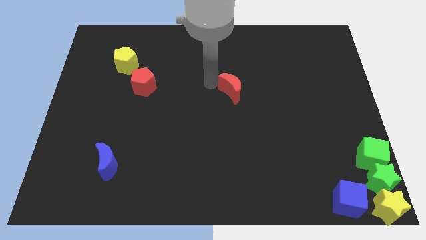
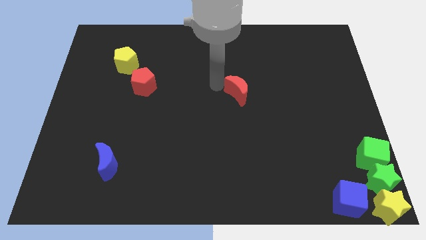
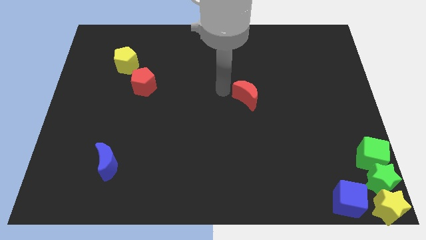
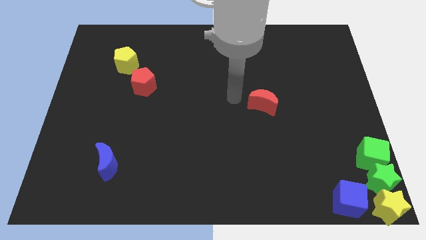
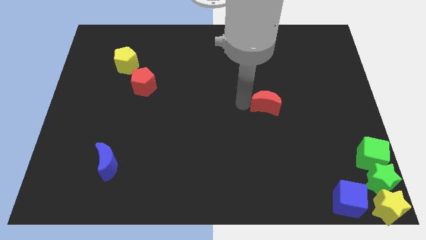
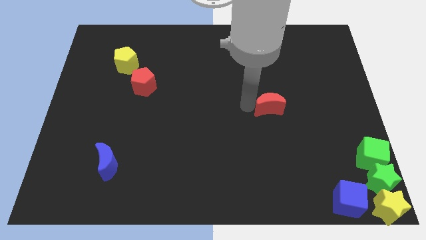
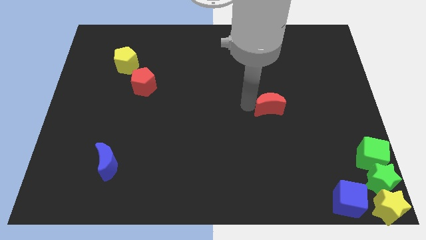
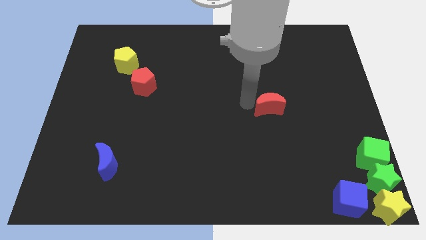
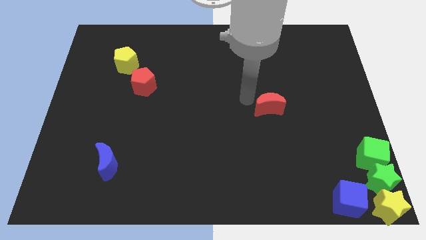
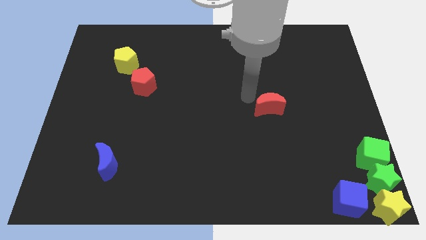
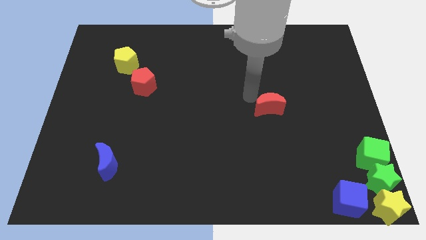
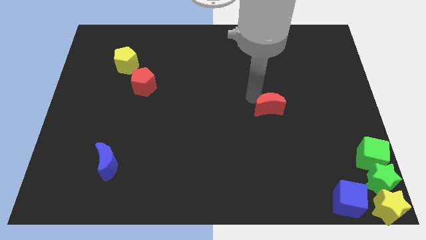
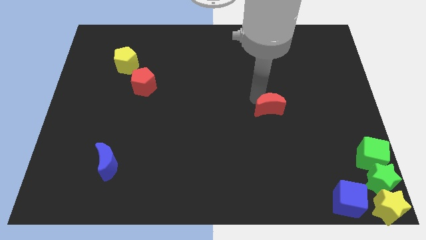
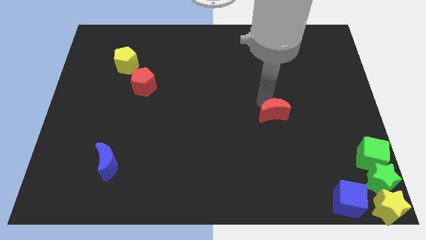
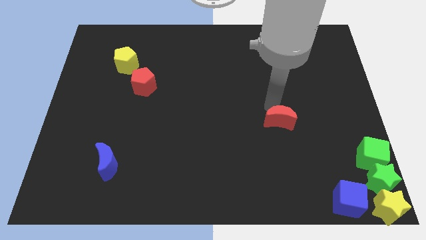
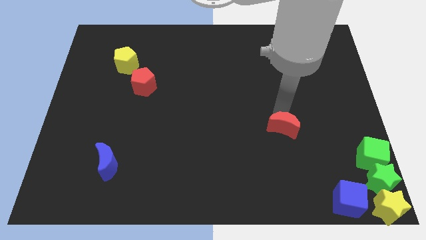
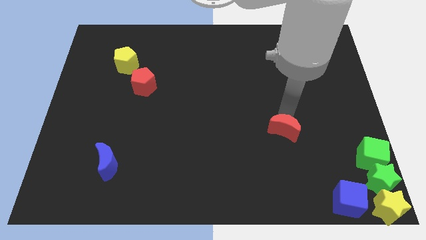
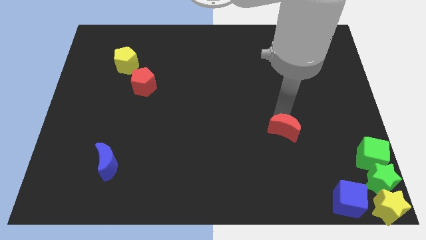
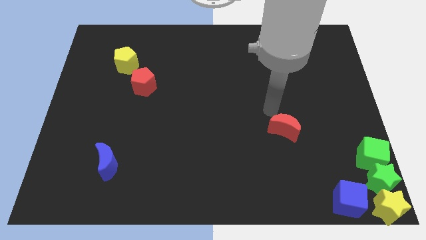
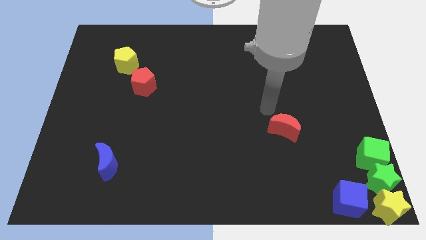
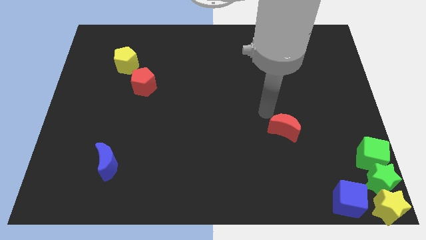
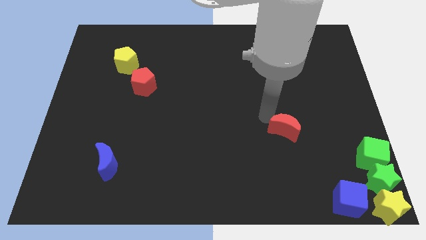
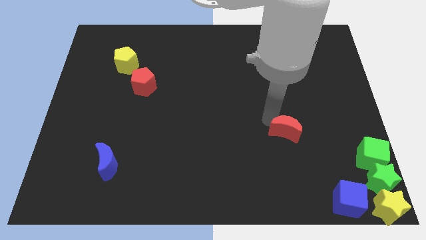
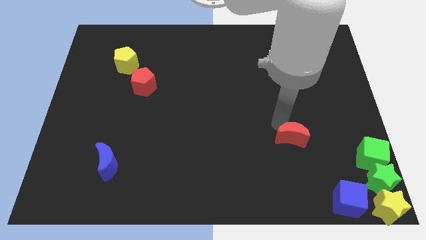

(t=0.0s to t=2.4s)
push the red crescent towards the bottom right of the board

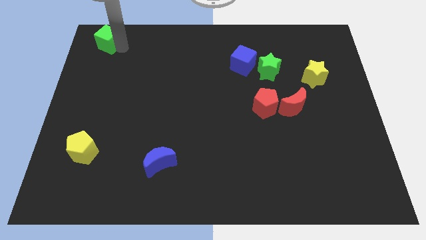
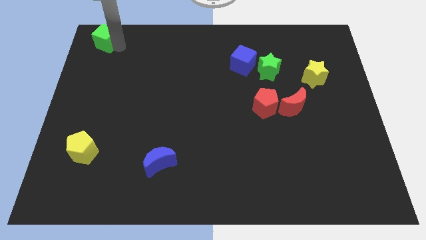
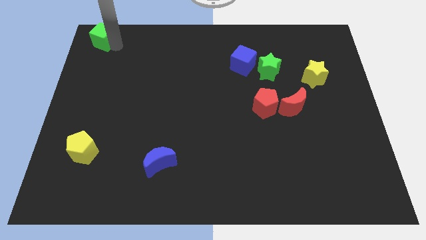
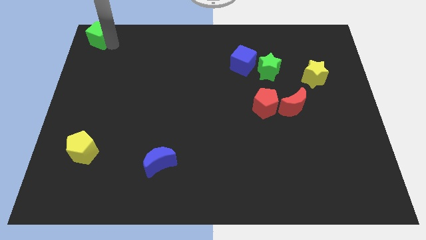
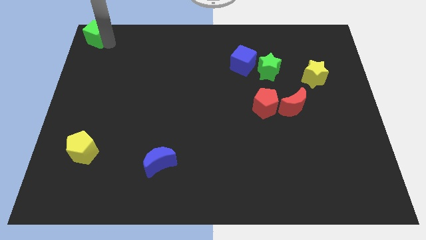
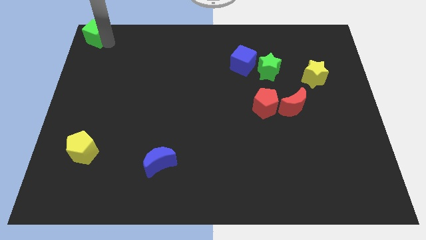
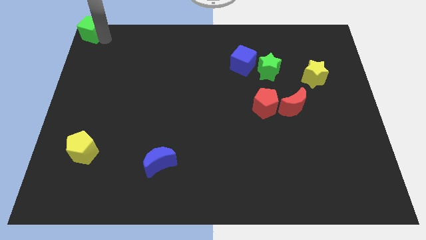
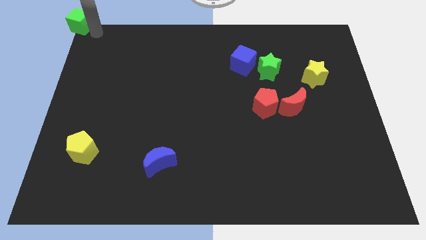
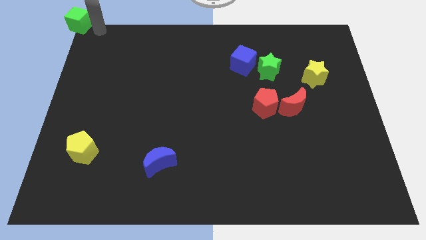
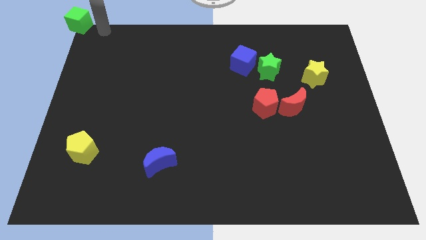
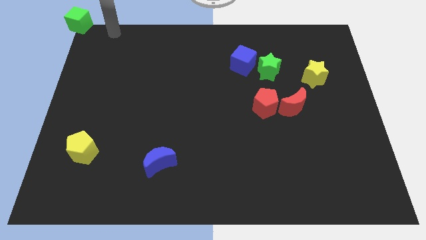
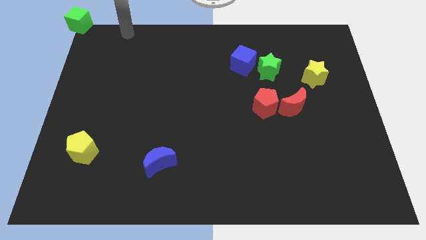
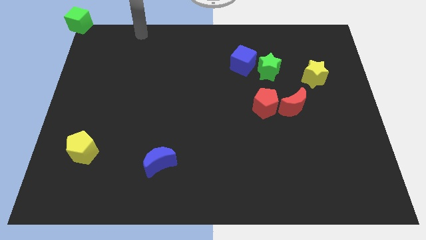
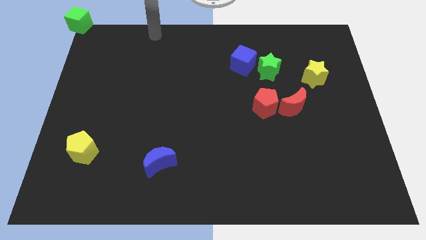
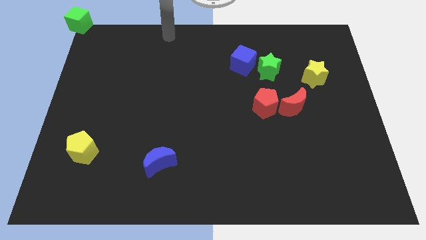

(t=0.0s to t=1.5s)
move the green cube to the top left edge of the board

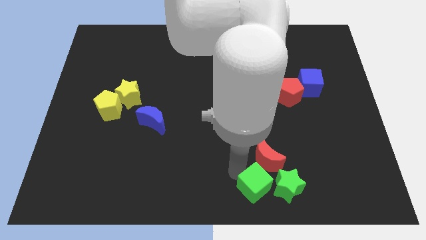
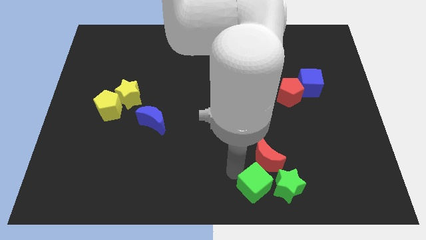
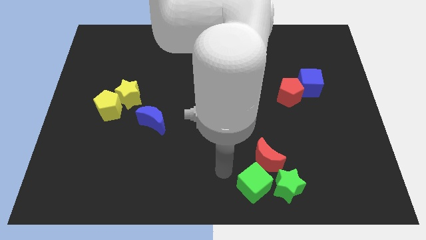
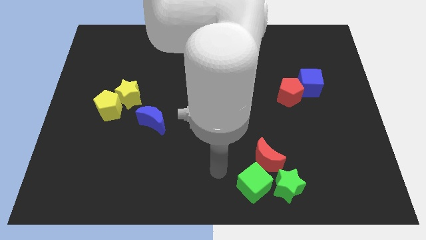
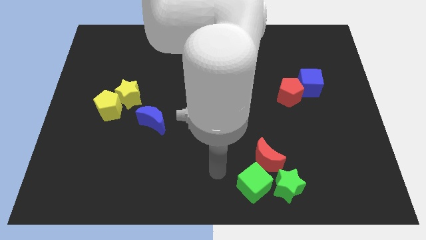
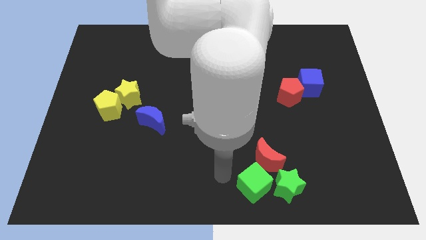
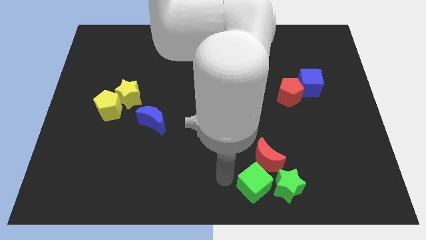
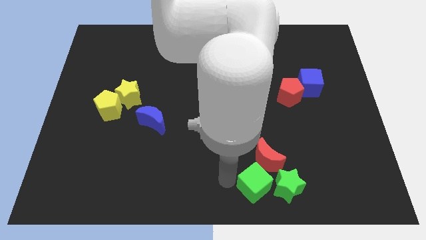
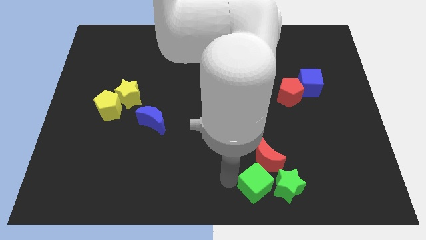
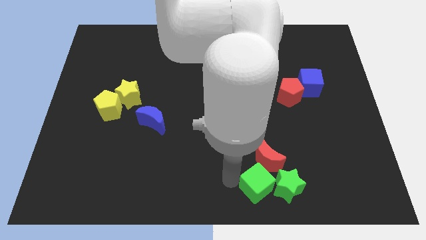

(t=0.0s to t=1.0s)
slightly push the green cube into the green star

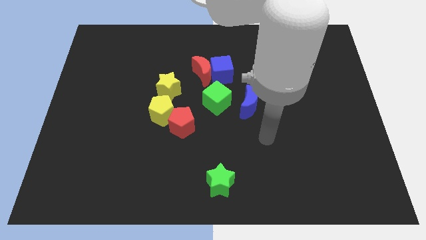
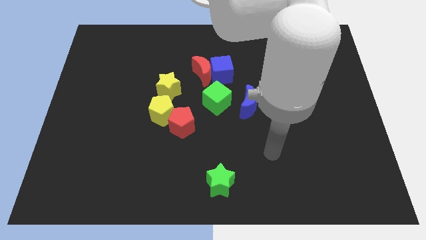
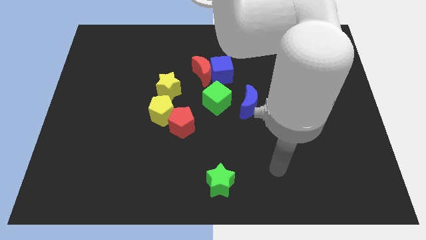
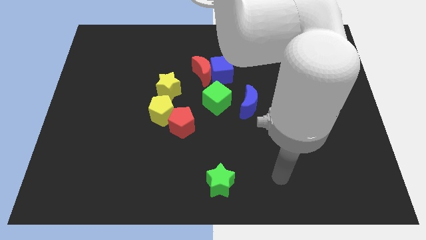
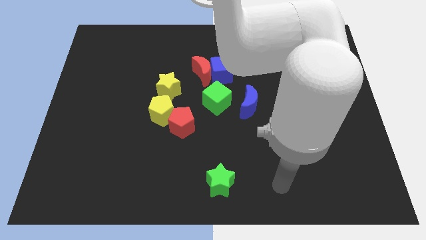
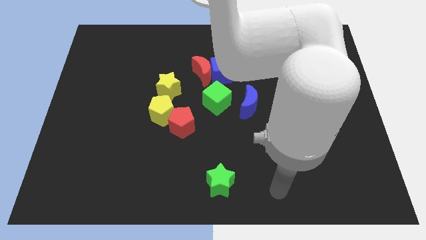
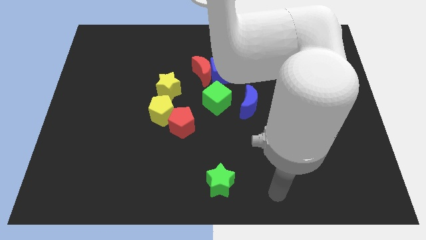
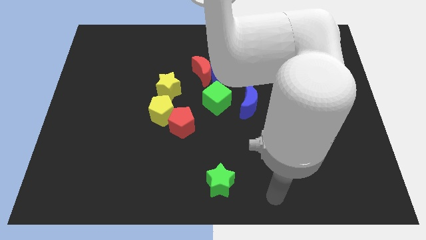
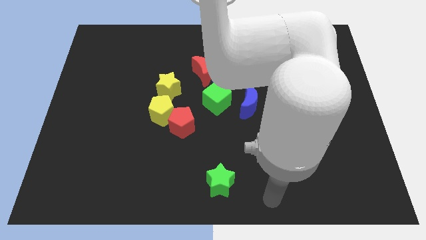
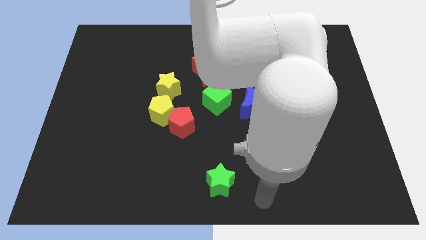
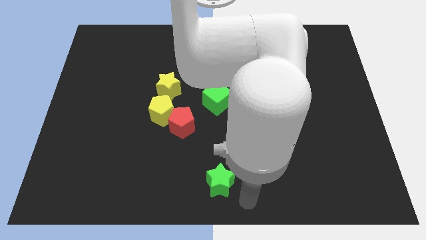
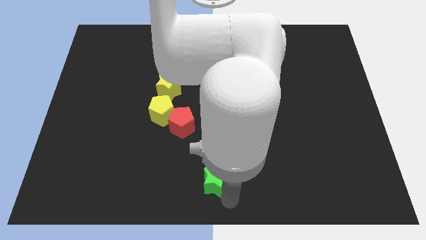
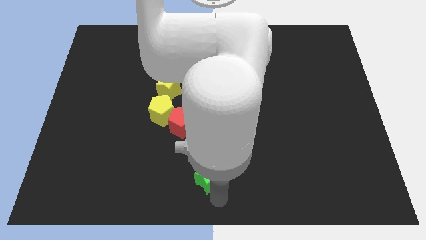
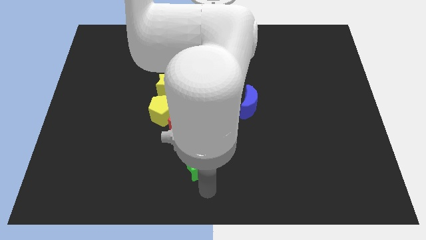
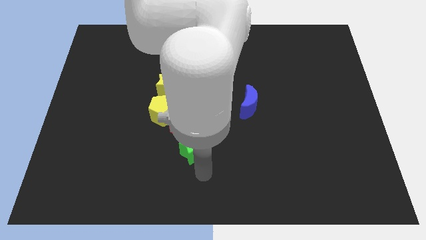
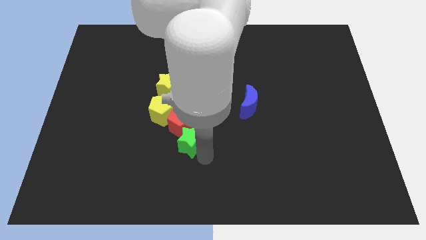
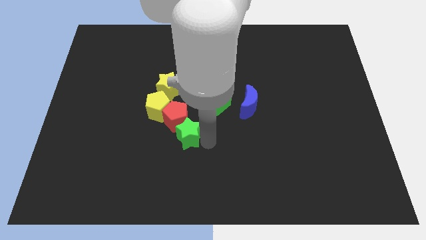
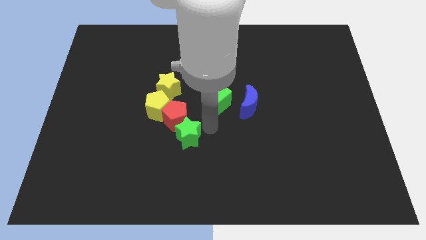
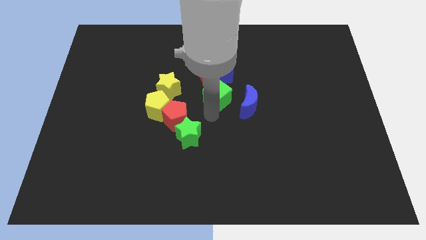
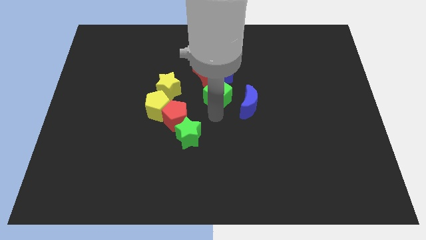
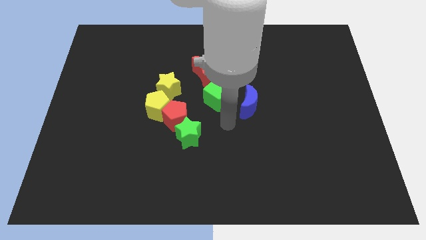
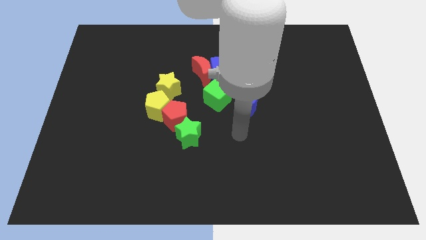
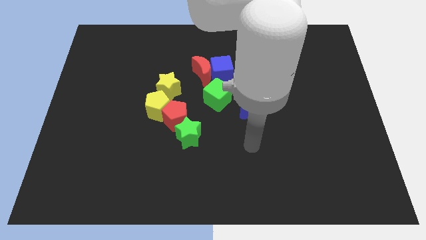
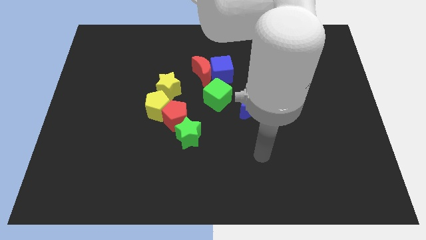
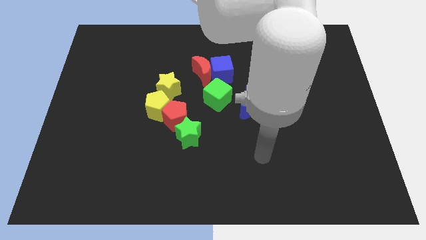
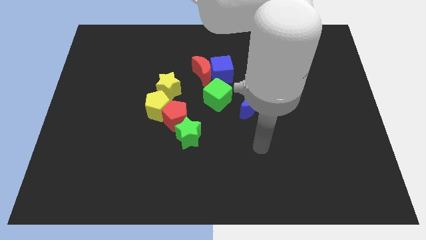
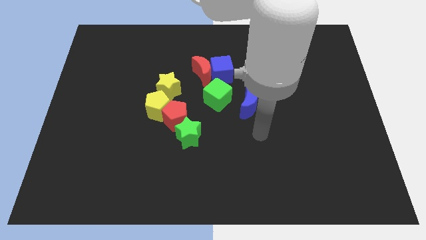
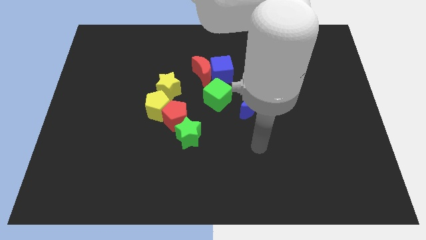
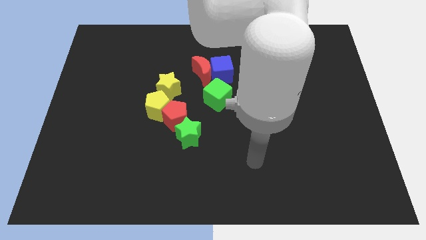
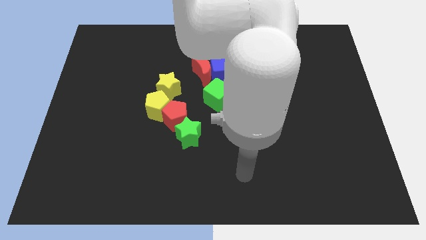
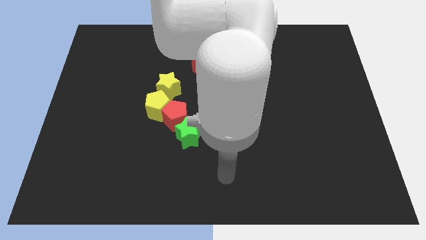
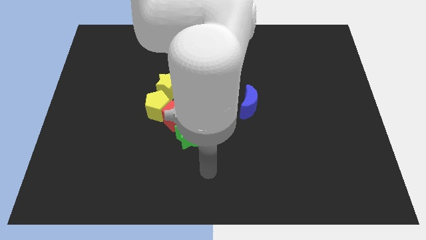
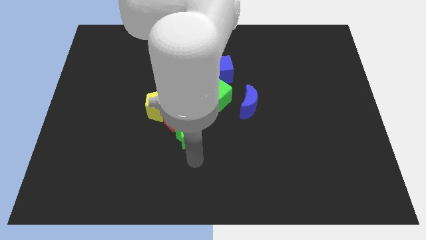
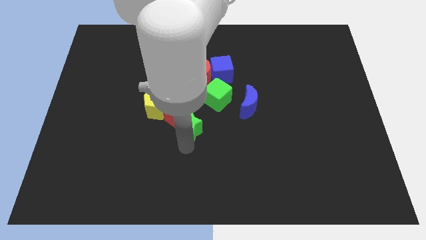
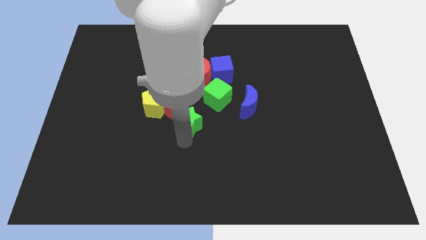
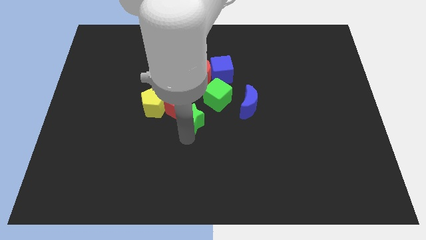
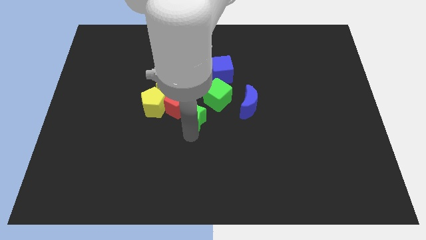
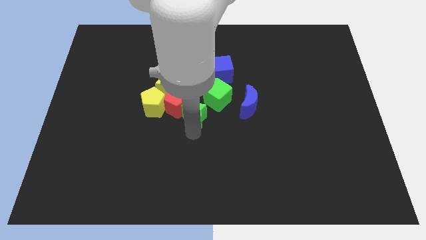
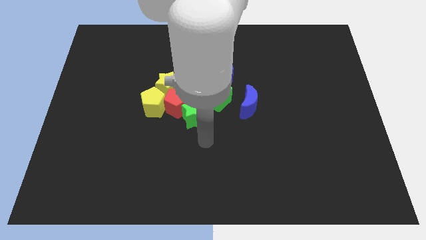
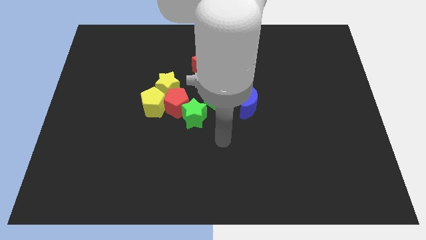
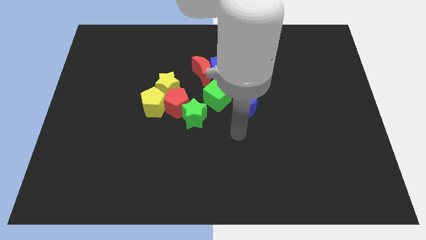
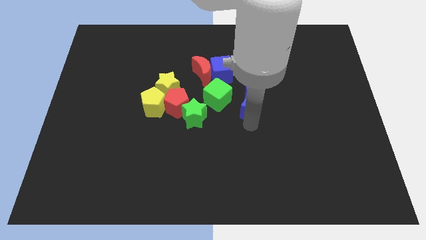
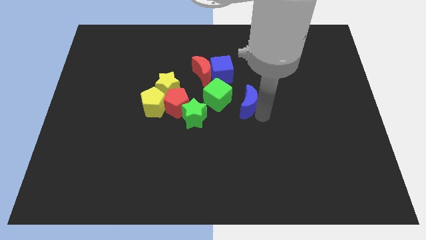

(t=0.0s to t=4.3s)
move the green star towards the center of the board
